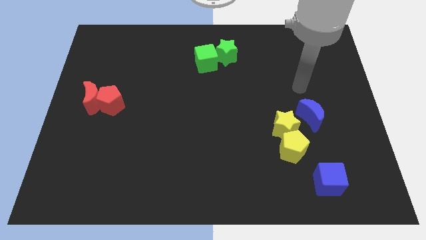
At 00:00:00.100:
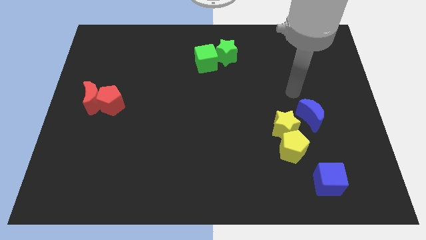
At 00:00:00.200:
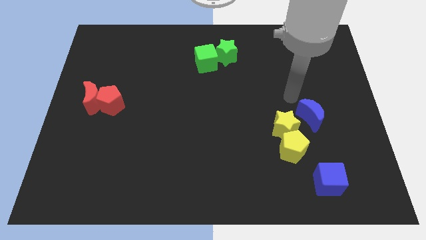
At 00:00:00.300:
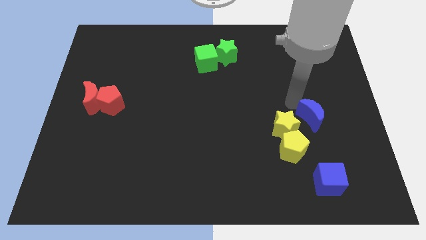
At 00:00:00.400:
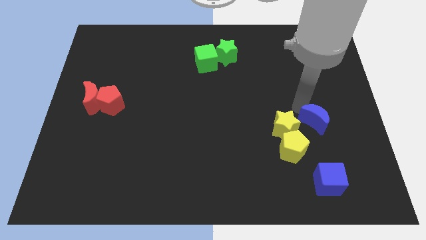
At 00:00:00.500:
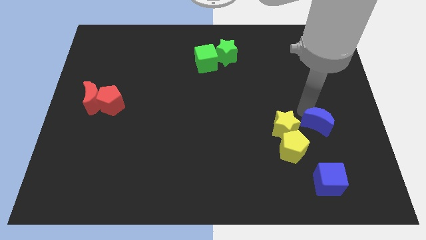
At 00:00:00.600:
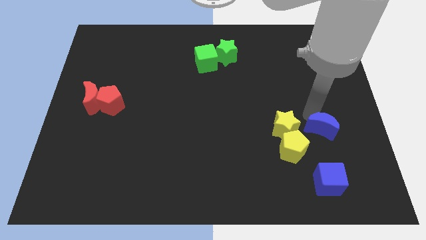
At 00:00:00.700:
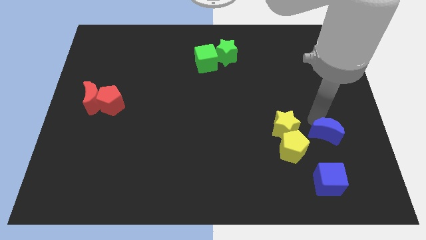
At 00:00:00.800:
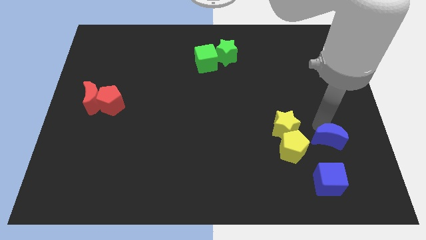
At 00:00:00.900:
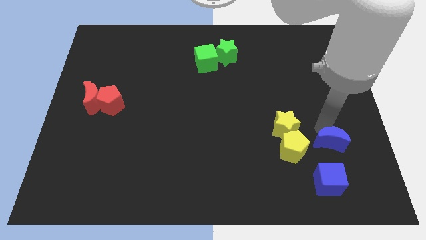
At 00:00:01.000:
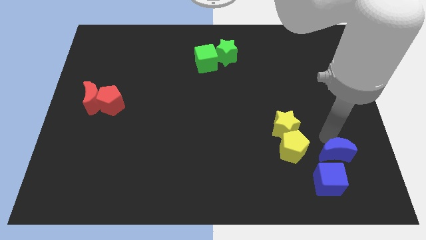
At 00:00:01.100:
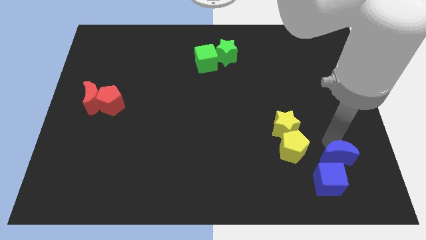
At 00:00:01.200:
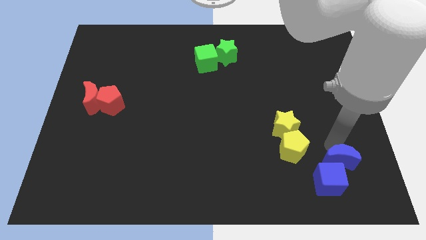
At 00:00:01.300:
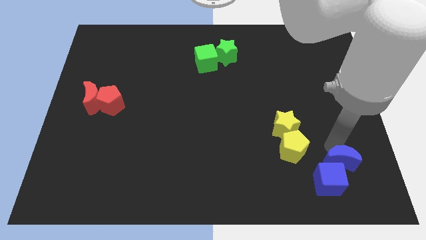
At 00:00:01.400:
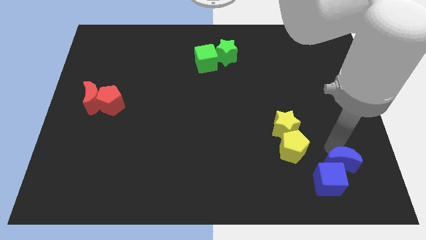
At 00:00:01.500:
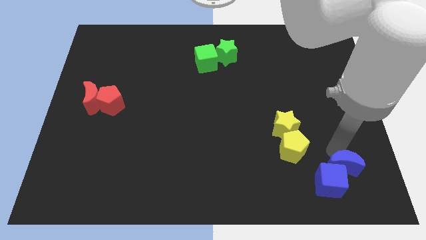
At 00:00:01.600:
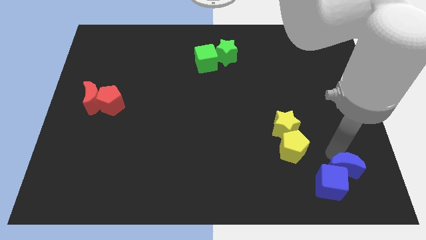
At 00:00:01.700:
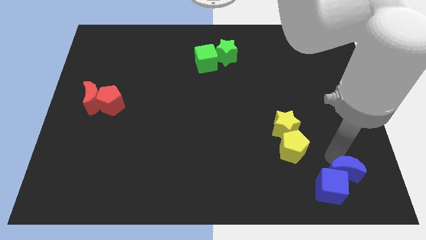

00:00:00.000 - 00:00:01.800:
push the blue crescent into blue cube

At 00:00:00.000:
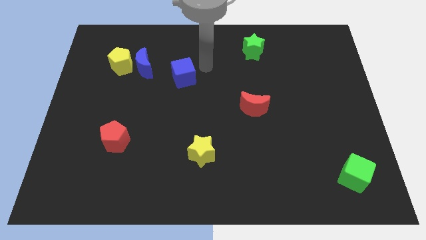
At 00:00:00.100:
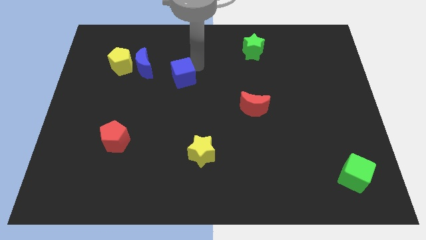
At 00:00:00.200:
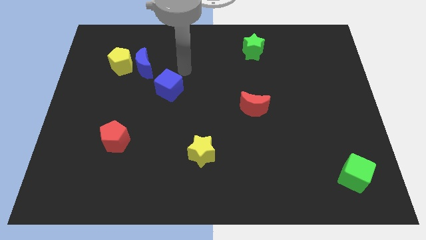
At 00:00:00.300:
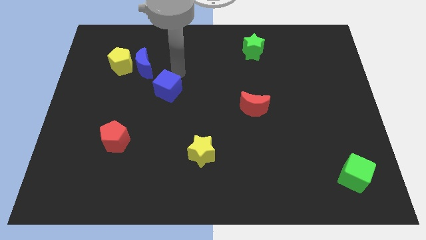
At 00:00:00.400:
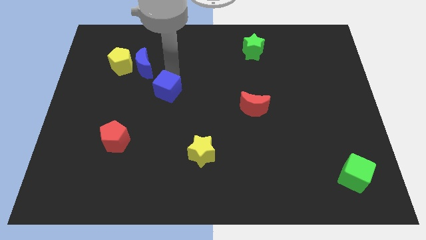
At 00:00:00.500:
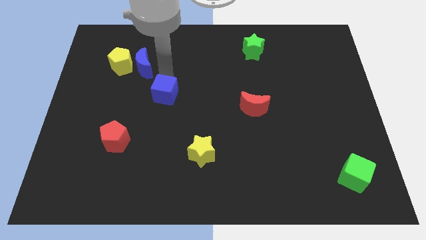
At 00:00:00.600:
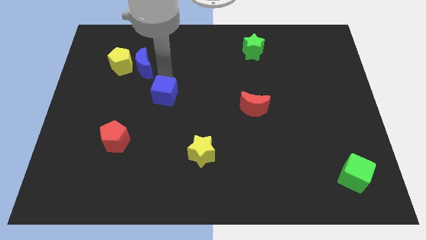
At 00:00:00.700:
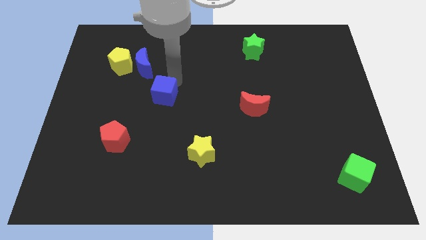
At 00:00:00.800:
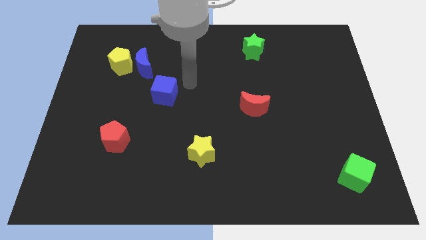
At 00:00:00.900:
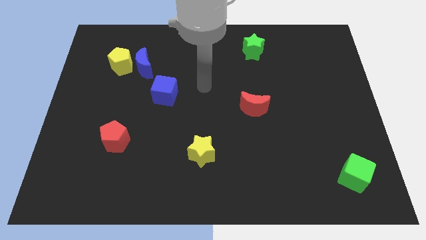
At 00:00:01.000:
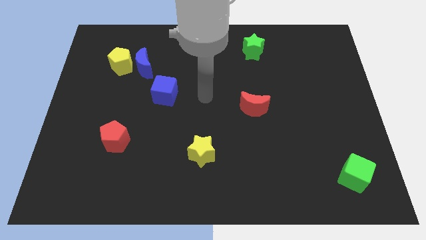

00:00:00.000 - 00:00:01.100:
slide blue cube to bottom right of blue moon

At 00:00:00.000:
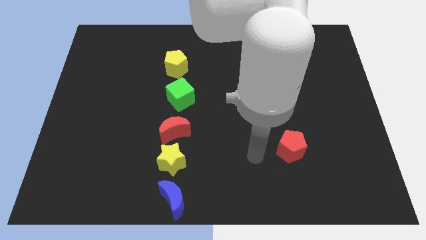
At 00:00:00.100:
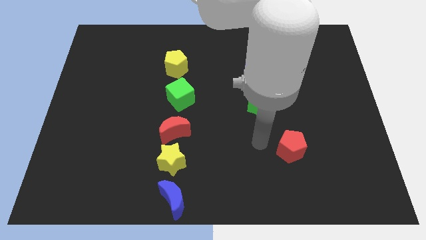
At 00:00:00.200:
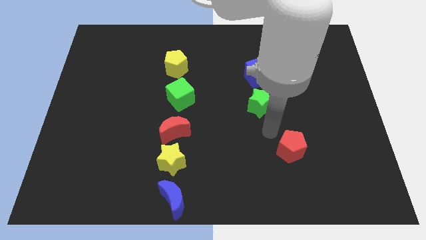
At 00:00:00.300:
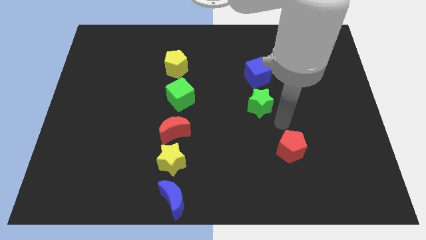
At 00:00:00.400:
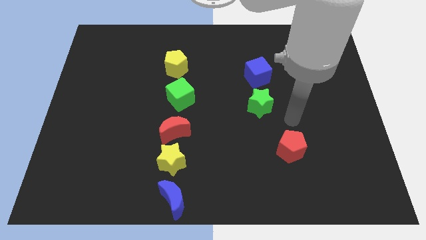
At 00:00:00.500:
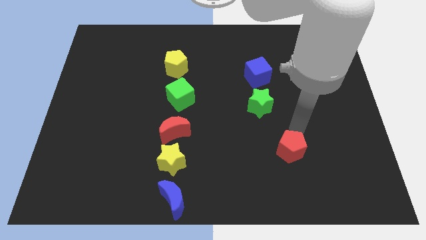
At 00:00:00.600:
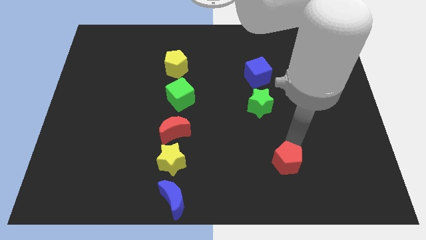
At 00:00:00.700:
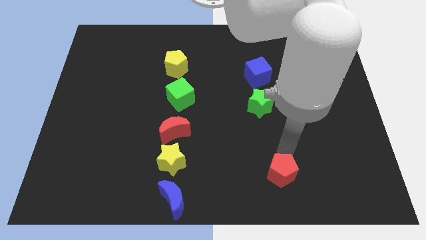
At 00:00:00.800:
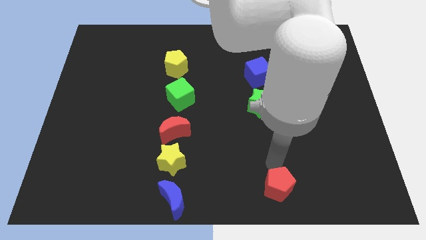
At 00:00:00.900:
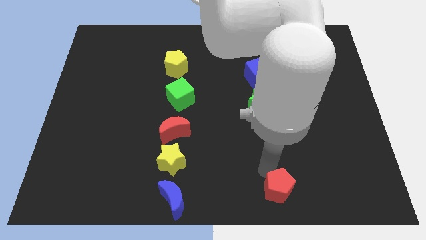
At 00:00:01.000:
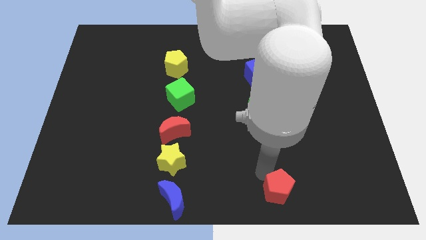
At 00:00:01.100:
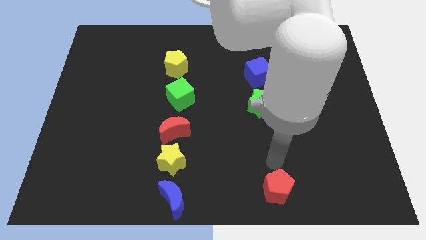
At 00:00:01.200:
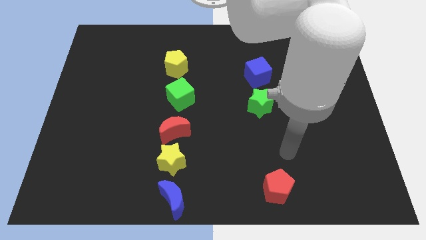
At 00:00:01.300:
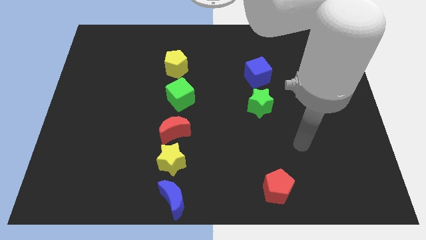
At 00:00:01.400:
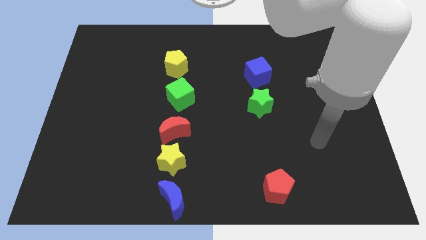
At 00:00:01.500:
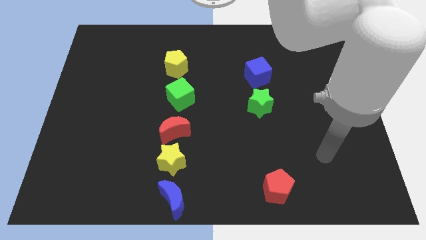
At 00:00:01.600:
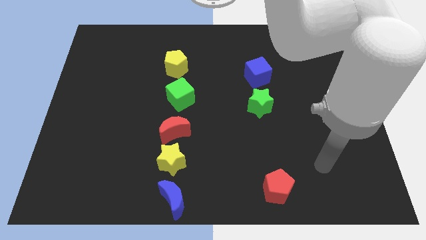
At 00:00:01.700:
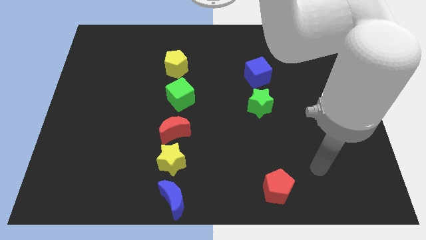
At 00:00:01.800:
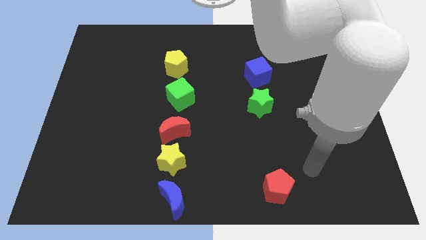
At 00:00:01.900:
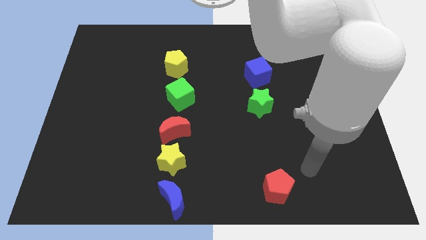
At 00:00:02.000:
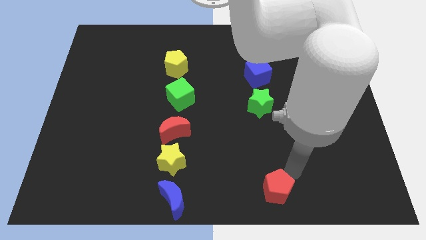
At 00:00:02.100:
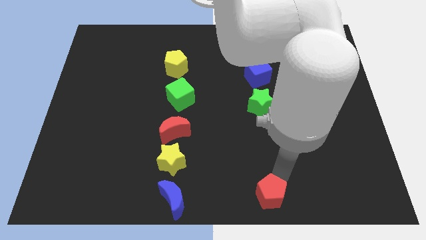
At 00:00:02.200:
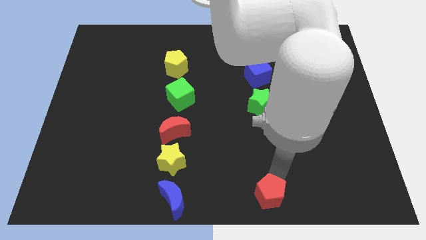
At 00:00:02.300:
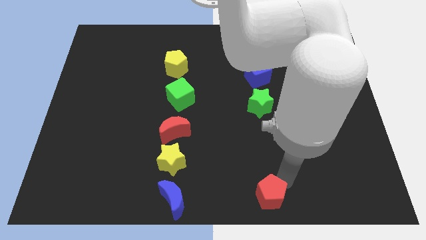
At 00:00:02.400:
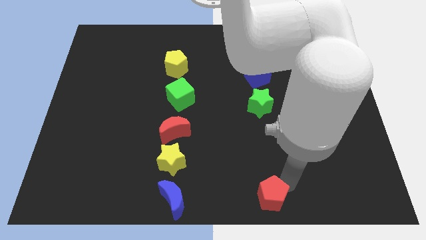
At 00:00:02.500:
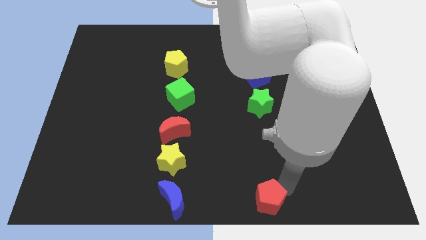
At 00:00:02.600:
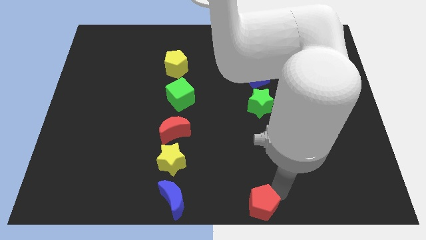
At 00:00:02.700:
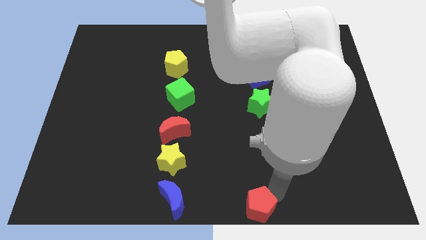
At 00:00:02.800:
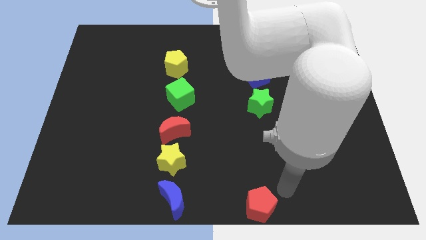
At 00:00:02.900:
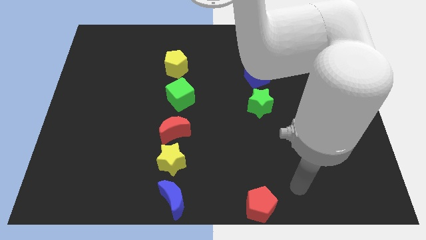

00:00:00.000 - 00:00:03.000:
push the red pentagon at the bottom of the board

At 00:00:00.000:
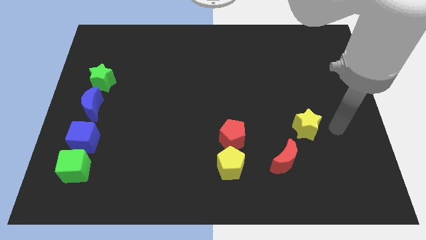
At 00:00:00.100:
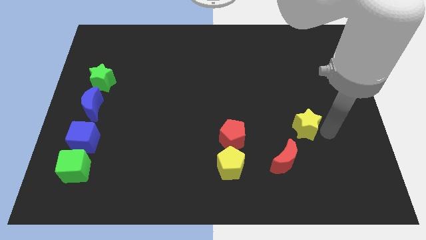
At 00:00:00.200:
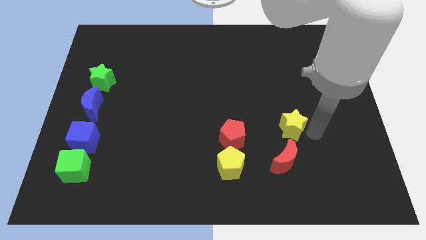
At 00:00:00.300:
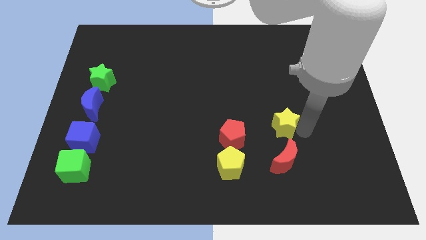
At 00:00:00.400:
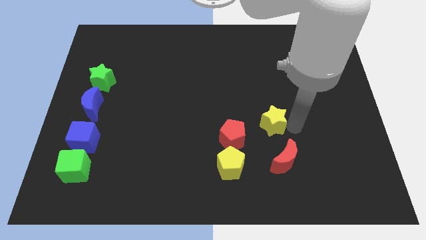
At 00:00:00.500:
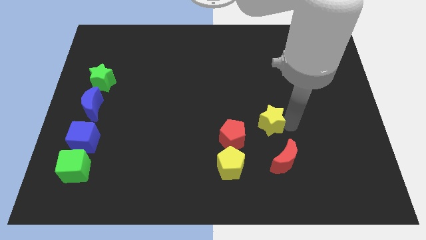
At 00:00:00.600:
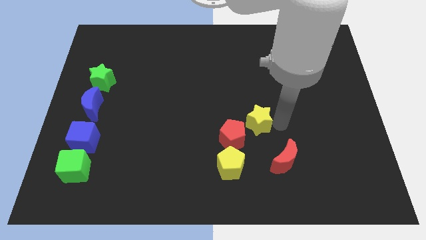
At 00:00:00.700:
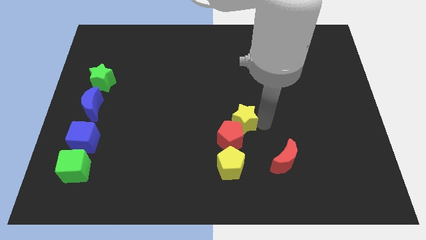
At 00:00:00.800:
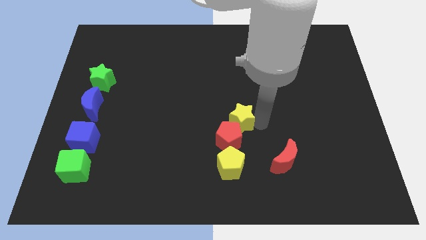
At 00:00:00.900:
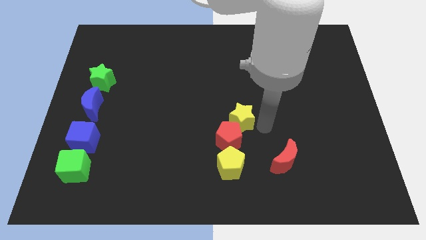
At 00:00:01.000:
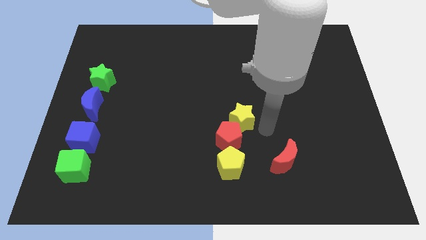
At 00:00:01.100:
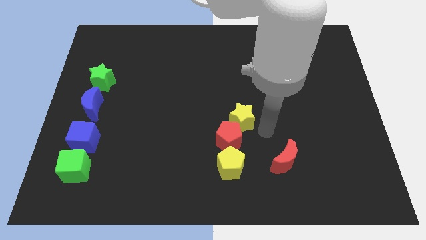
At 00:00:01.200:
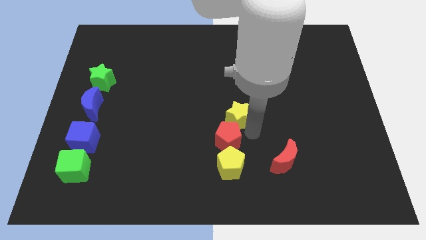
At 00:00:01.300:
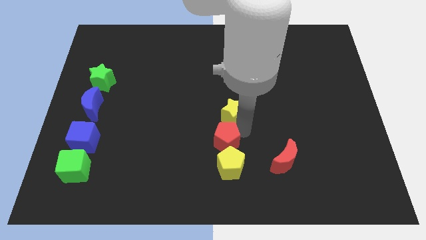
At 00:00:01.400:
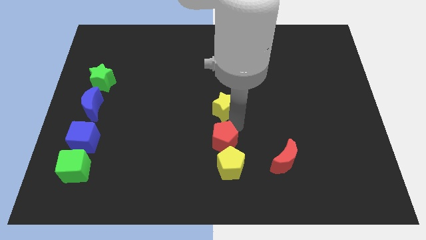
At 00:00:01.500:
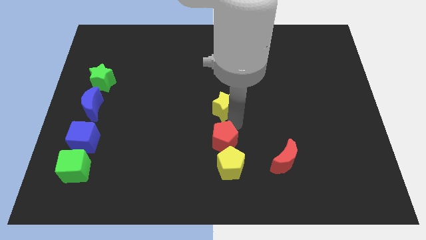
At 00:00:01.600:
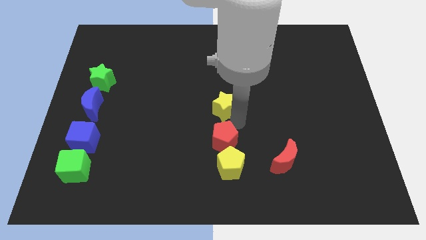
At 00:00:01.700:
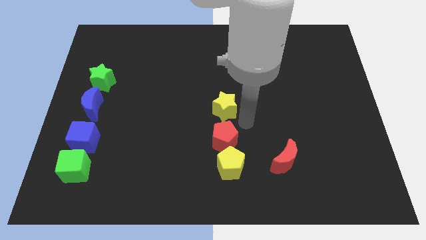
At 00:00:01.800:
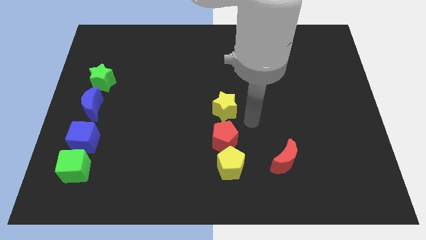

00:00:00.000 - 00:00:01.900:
move the yellow star to the top side of the red pentagon

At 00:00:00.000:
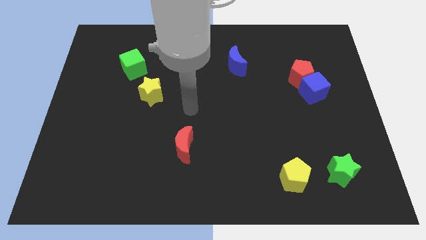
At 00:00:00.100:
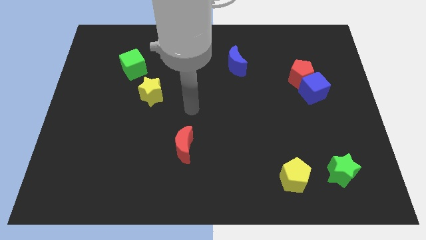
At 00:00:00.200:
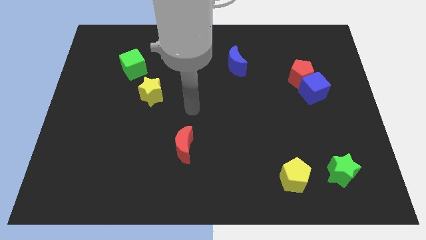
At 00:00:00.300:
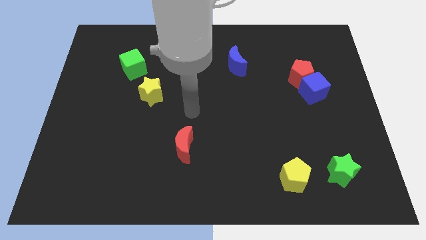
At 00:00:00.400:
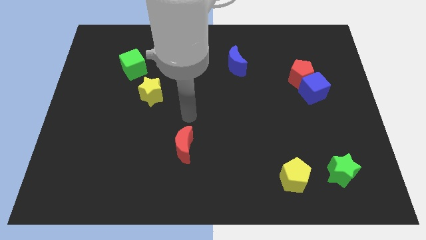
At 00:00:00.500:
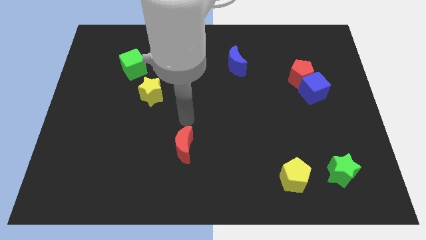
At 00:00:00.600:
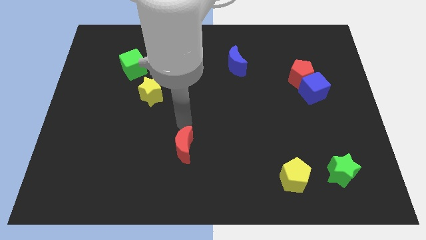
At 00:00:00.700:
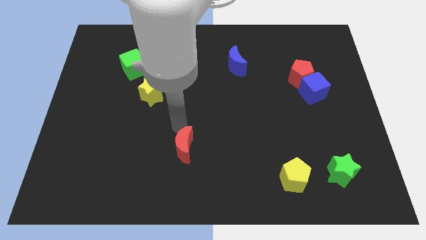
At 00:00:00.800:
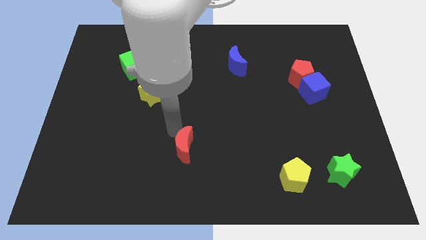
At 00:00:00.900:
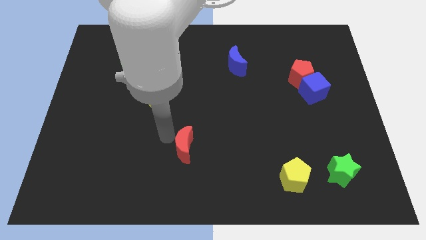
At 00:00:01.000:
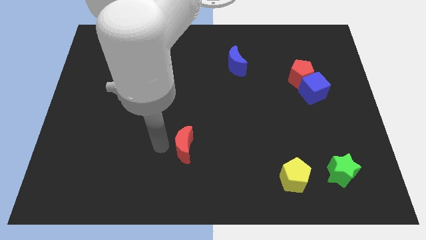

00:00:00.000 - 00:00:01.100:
place your arm to the left of the red crescent
